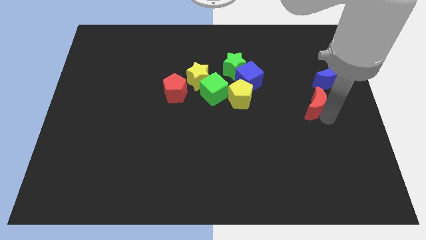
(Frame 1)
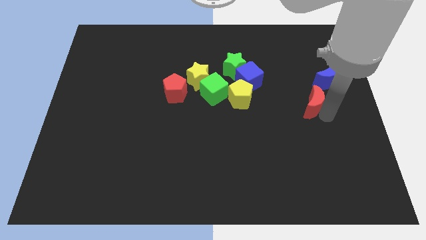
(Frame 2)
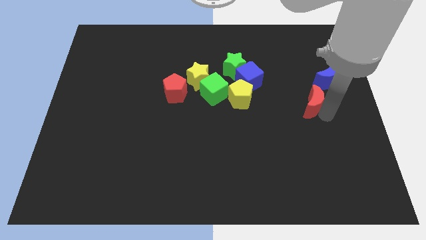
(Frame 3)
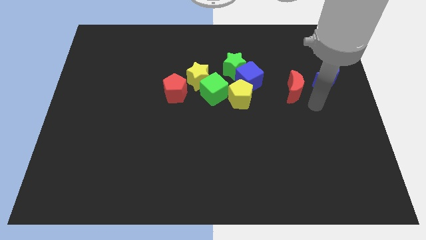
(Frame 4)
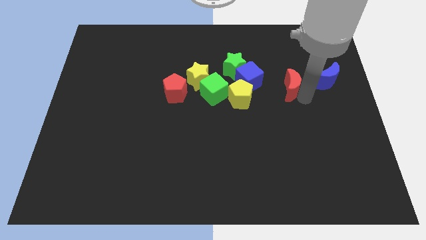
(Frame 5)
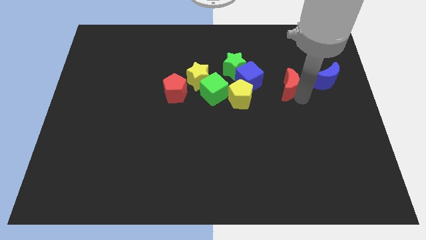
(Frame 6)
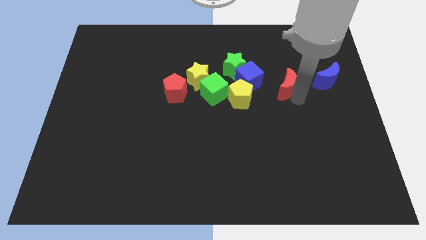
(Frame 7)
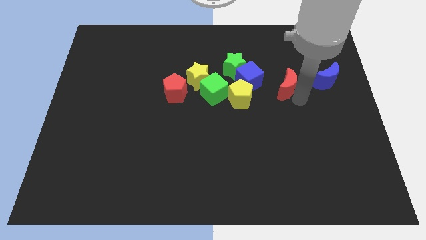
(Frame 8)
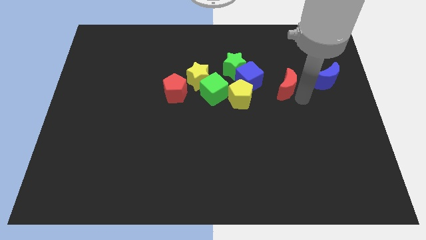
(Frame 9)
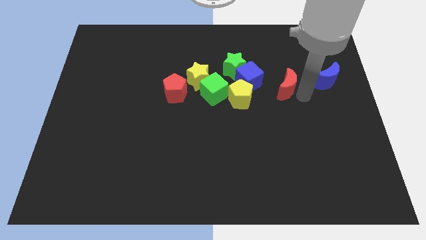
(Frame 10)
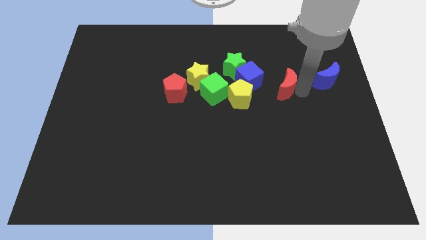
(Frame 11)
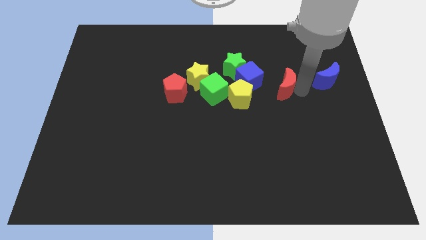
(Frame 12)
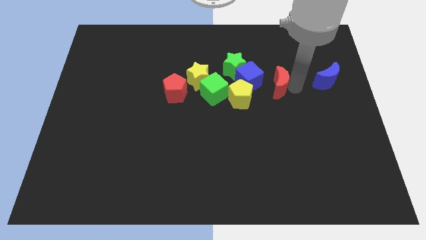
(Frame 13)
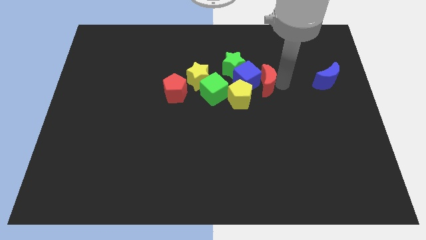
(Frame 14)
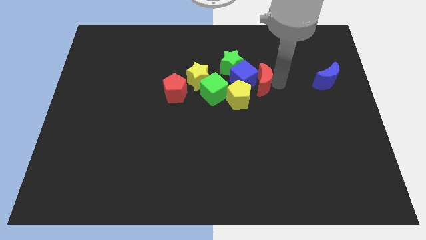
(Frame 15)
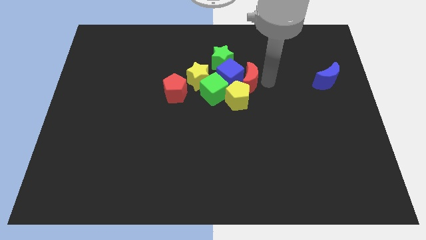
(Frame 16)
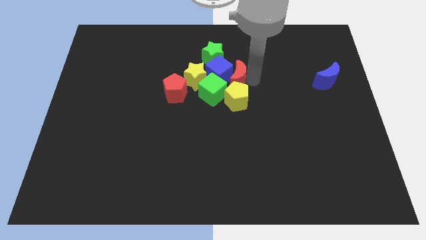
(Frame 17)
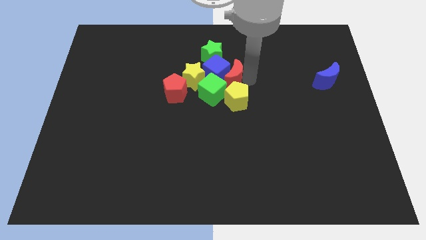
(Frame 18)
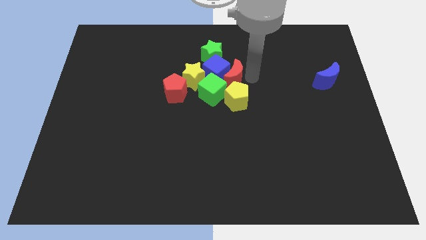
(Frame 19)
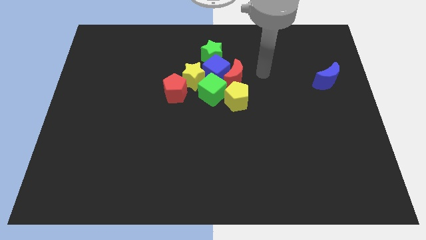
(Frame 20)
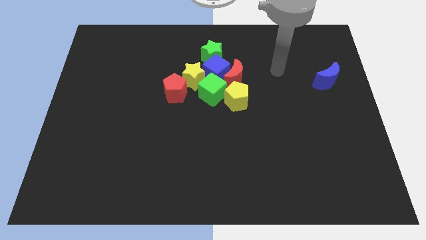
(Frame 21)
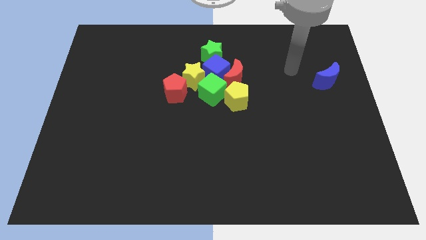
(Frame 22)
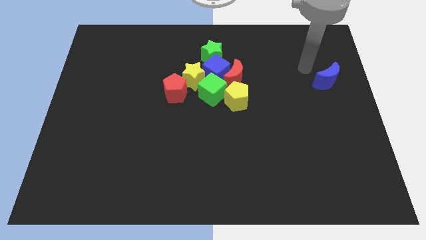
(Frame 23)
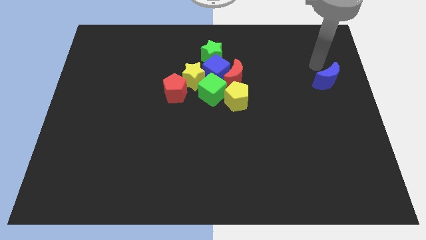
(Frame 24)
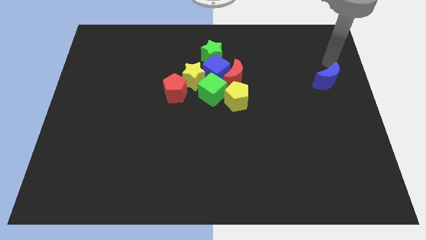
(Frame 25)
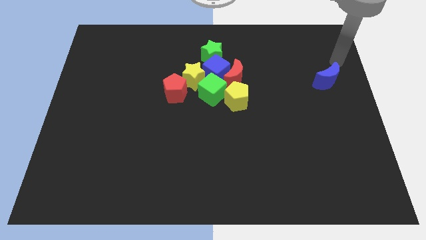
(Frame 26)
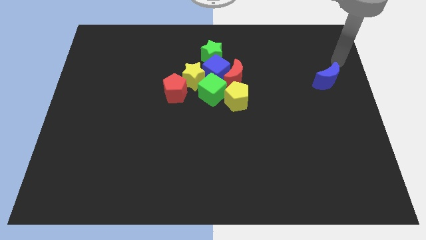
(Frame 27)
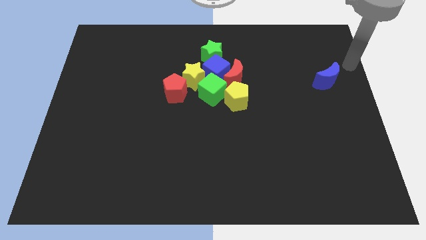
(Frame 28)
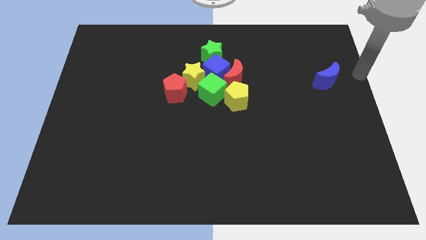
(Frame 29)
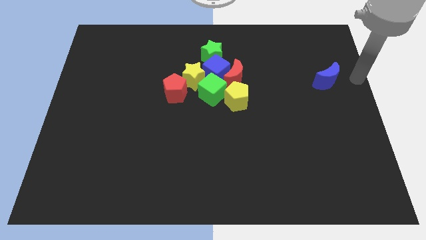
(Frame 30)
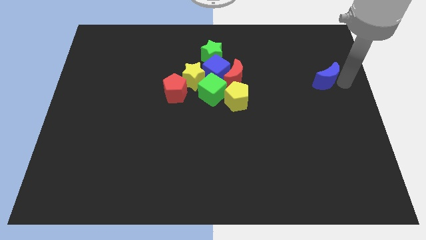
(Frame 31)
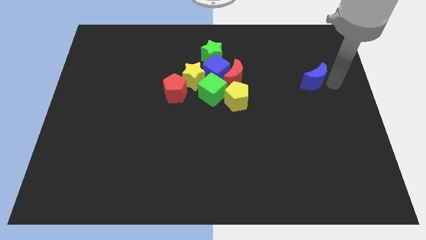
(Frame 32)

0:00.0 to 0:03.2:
push the red crescent close to the group of blocks

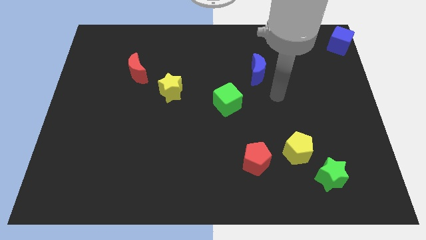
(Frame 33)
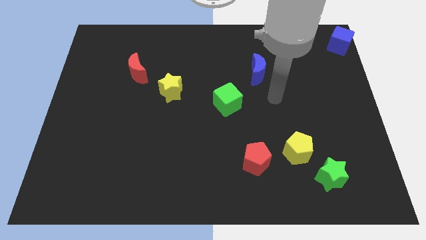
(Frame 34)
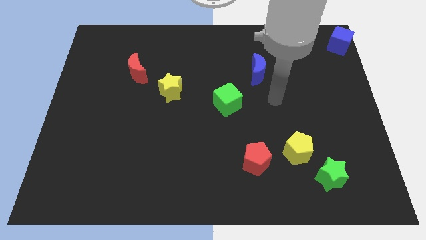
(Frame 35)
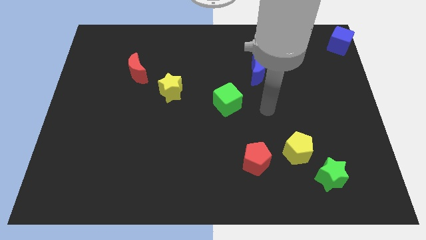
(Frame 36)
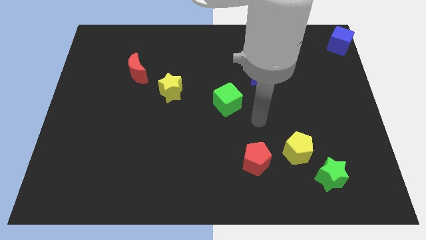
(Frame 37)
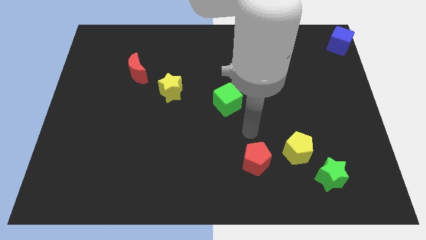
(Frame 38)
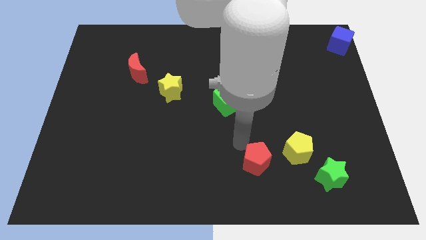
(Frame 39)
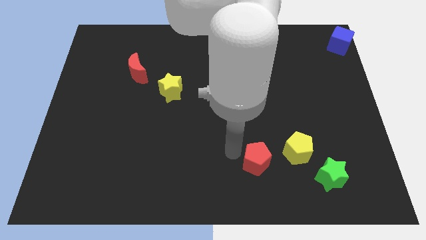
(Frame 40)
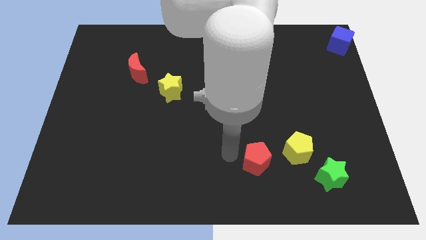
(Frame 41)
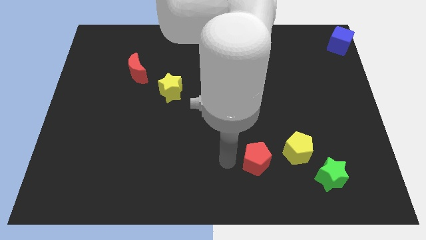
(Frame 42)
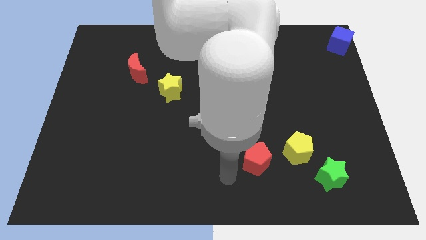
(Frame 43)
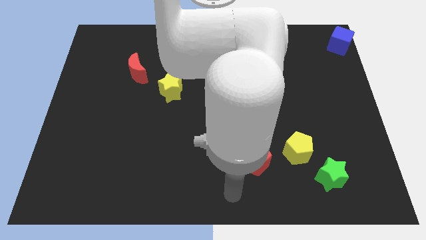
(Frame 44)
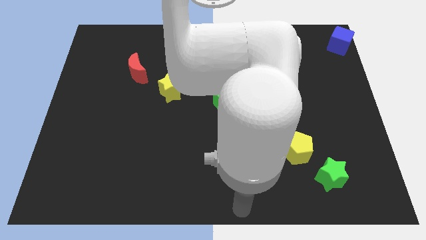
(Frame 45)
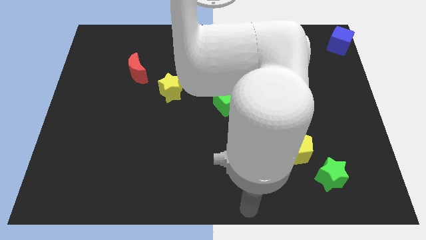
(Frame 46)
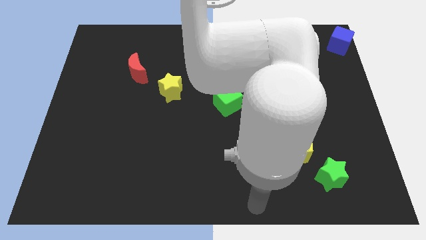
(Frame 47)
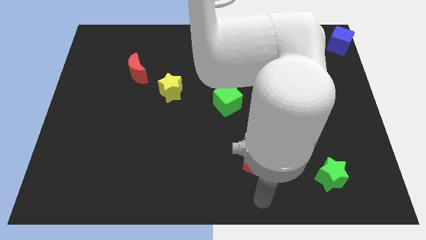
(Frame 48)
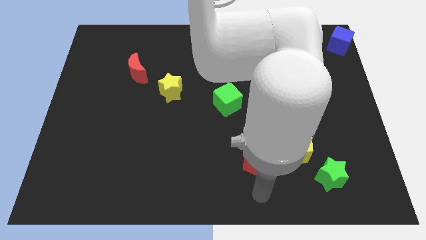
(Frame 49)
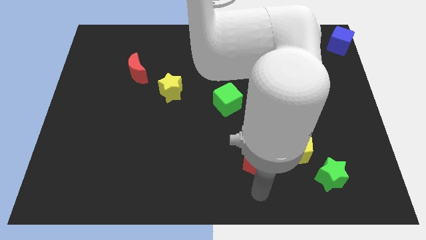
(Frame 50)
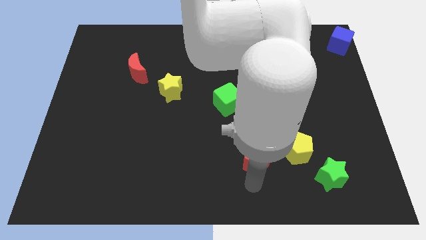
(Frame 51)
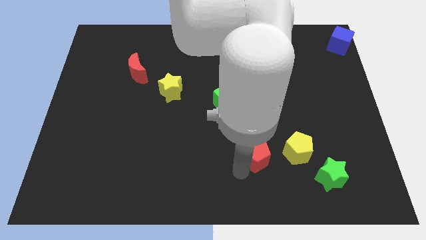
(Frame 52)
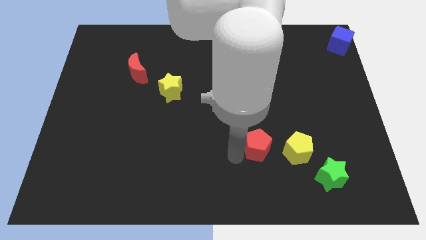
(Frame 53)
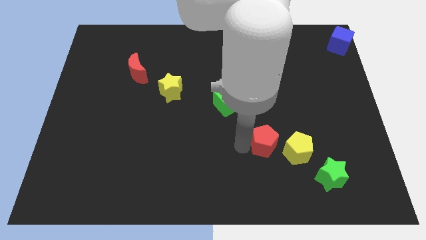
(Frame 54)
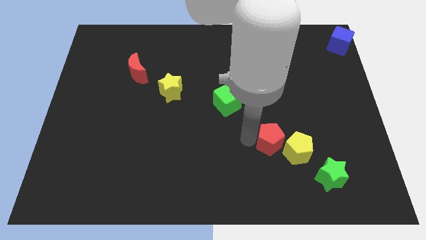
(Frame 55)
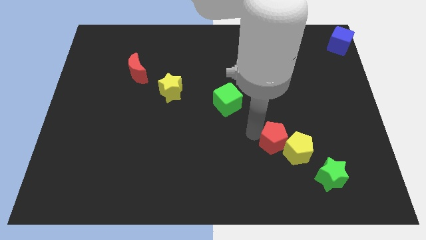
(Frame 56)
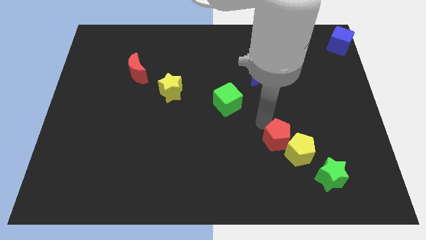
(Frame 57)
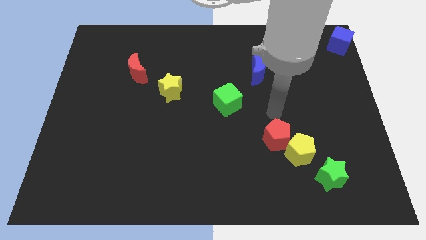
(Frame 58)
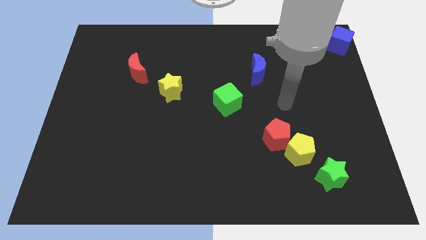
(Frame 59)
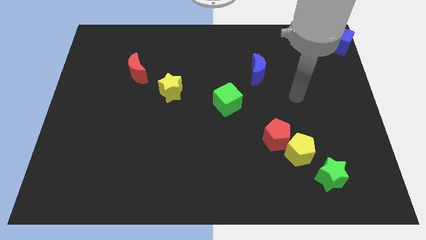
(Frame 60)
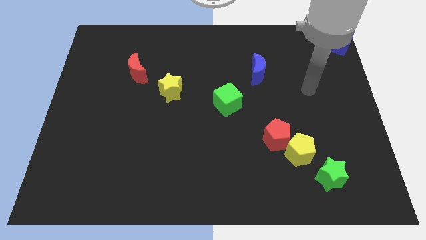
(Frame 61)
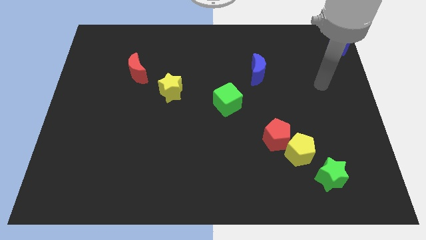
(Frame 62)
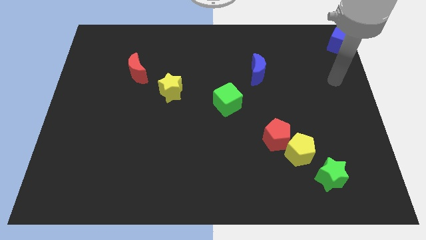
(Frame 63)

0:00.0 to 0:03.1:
move red pentagon towards the blue moon

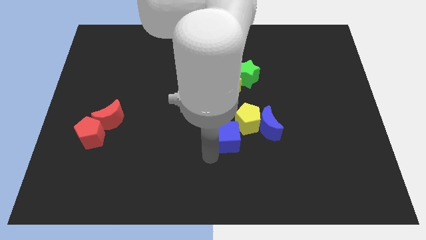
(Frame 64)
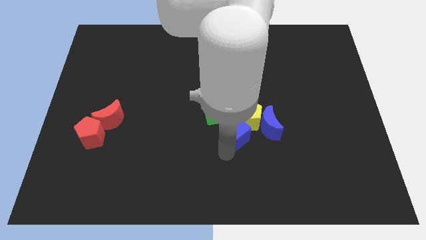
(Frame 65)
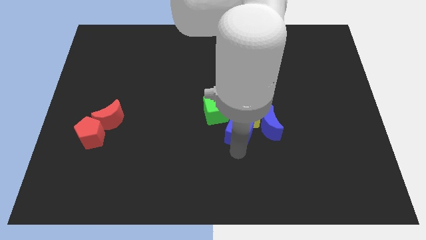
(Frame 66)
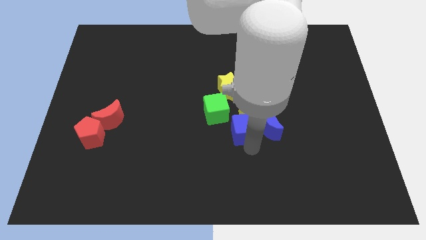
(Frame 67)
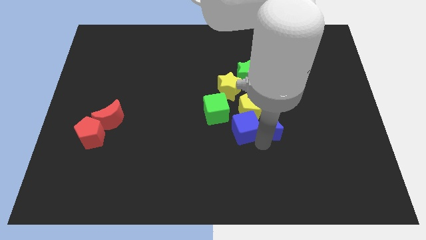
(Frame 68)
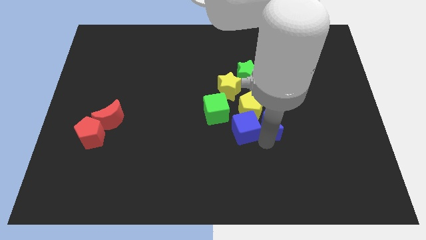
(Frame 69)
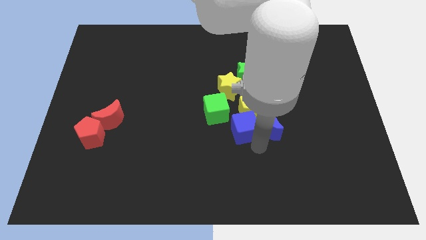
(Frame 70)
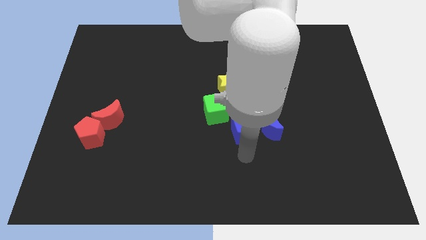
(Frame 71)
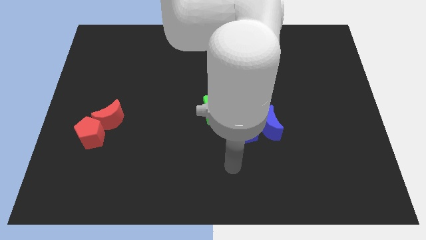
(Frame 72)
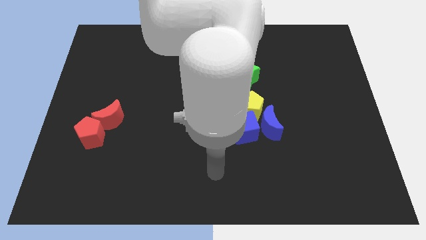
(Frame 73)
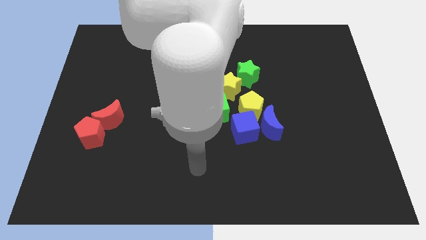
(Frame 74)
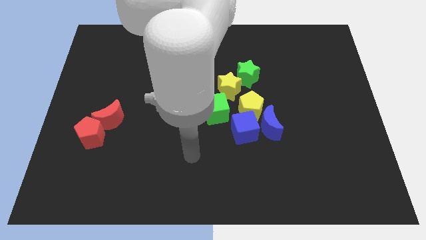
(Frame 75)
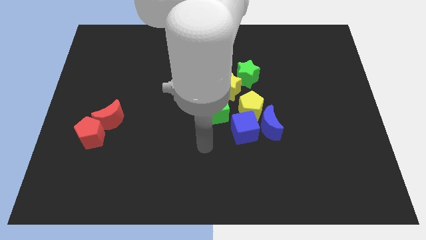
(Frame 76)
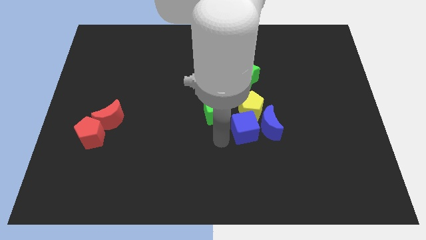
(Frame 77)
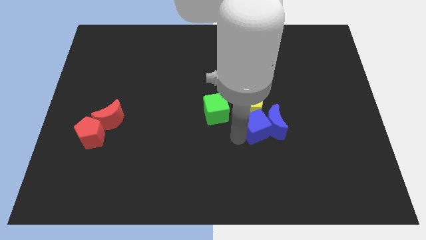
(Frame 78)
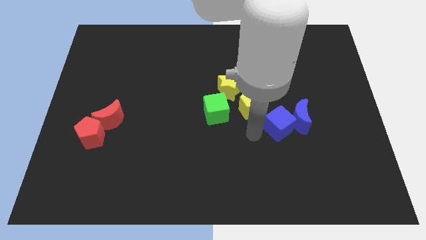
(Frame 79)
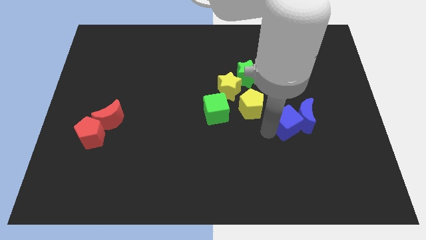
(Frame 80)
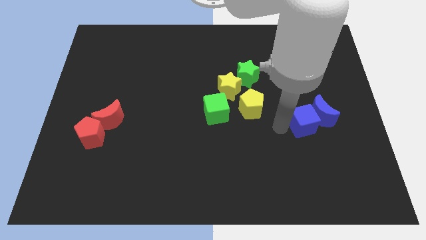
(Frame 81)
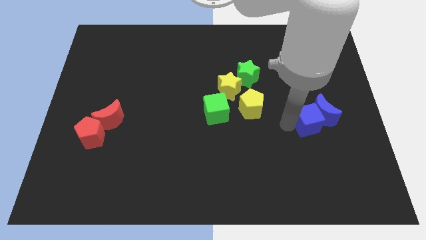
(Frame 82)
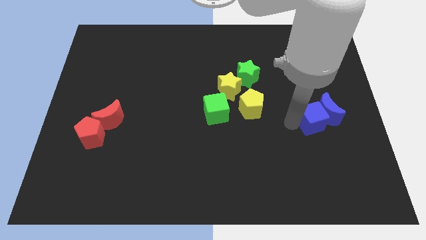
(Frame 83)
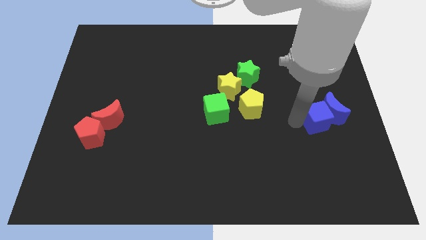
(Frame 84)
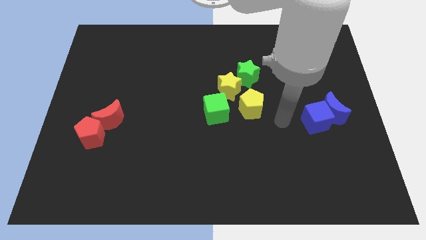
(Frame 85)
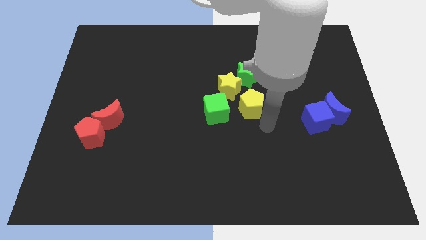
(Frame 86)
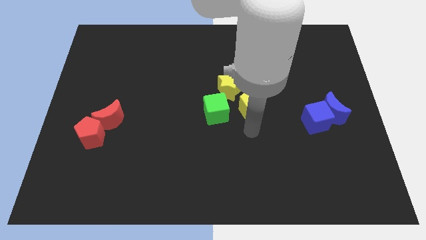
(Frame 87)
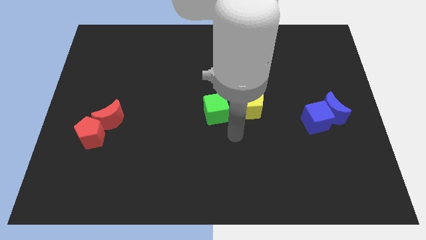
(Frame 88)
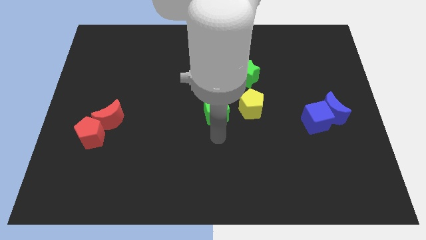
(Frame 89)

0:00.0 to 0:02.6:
push the blue moon towards the center right with the blue cube
